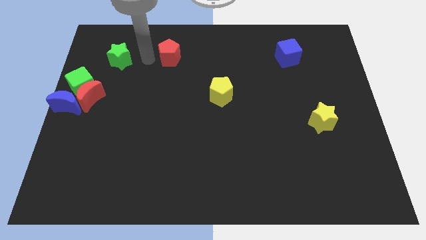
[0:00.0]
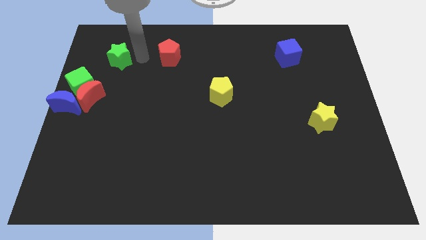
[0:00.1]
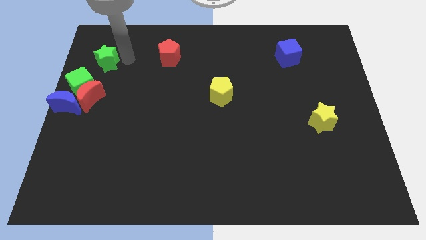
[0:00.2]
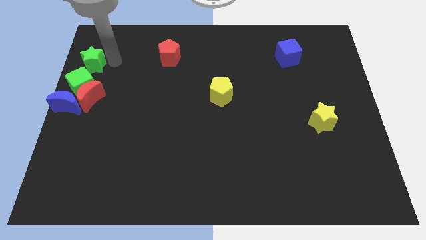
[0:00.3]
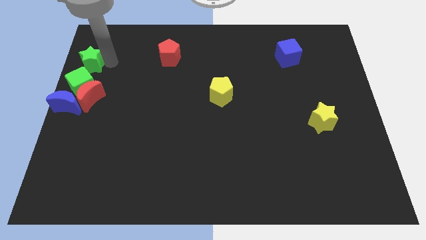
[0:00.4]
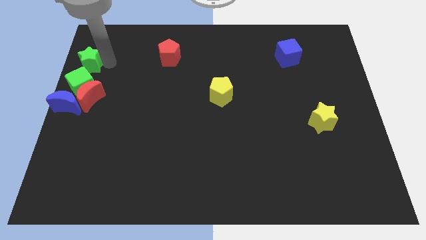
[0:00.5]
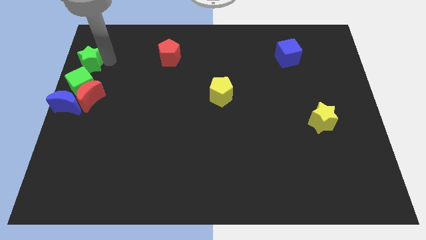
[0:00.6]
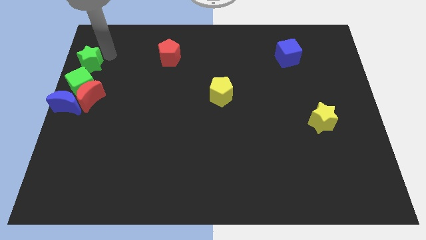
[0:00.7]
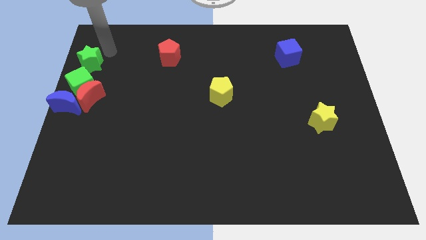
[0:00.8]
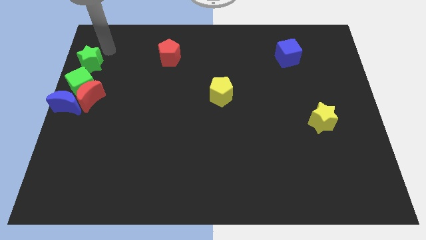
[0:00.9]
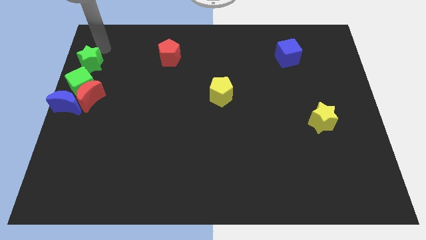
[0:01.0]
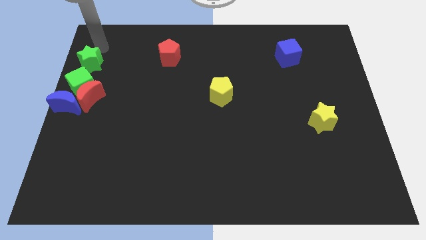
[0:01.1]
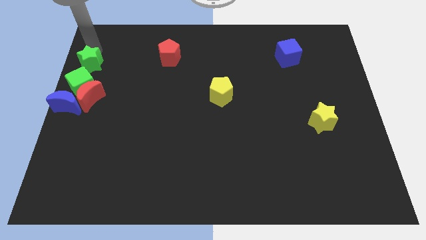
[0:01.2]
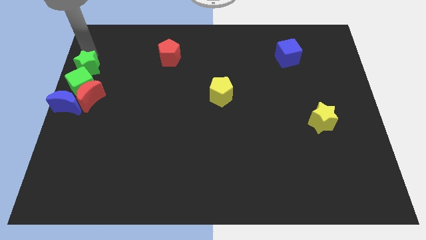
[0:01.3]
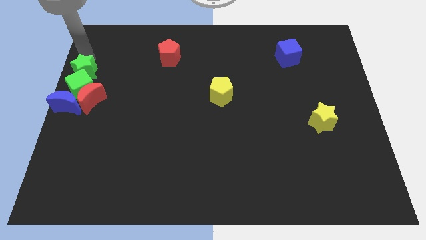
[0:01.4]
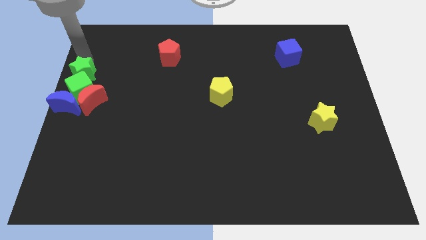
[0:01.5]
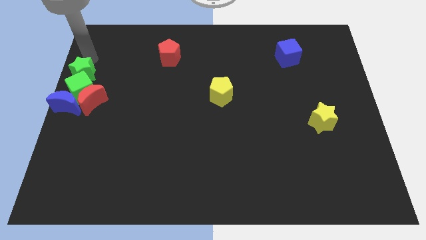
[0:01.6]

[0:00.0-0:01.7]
push the green star into the top of the green cube

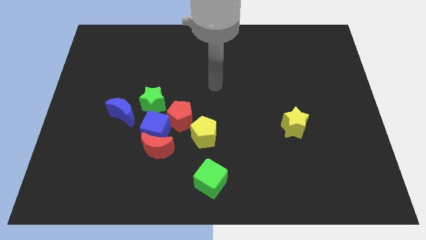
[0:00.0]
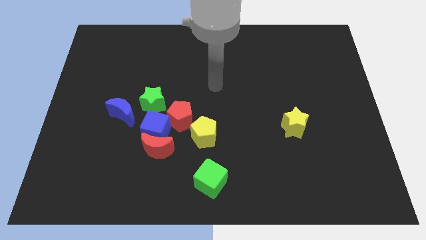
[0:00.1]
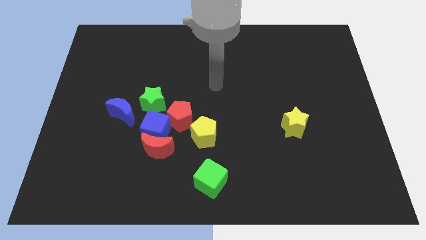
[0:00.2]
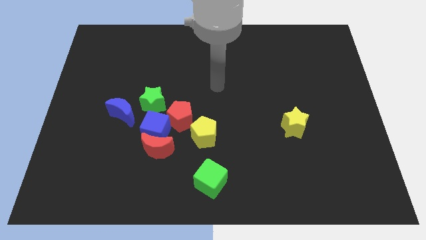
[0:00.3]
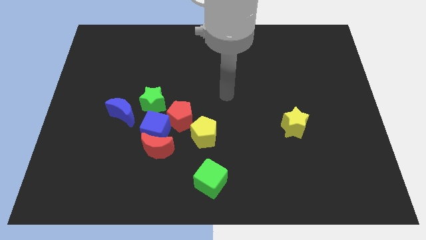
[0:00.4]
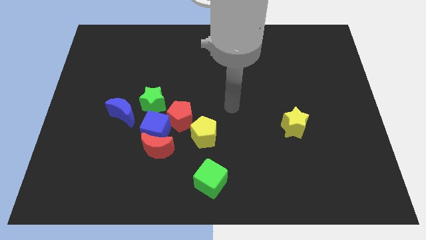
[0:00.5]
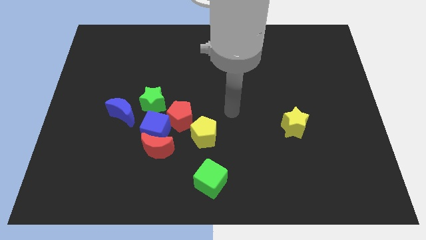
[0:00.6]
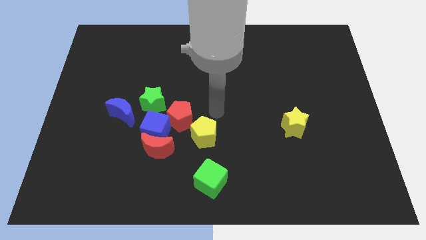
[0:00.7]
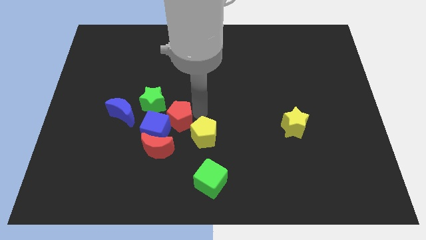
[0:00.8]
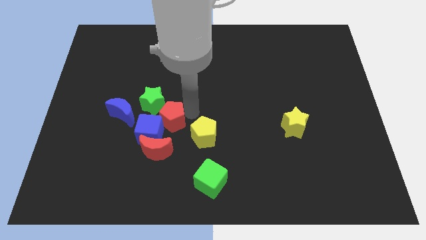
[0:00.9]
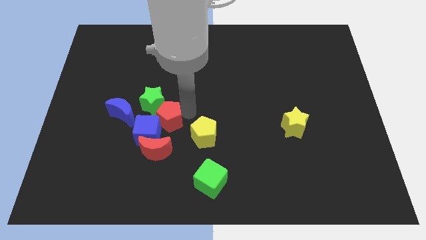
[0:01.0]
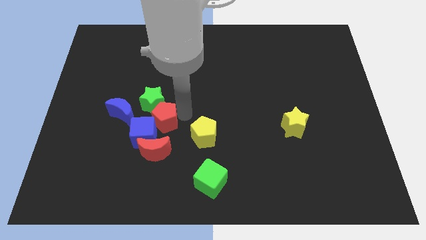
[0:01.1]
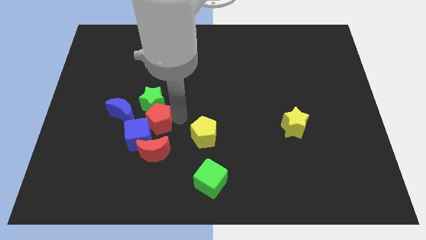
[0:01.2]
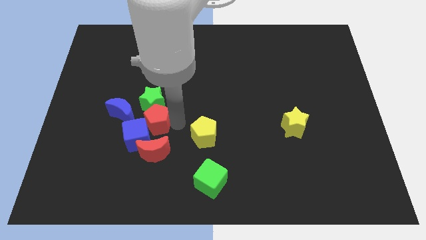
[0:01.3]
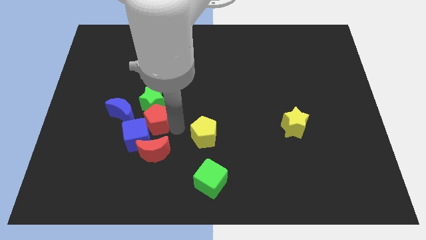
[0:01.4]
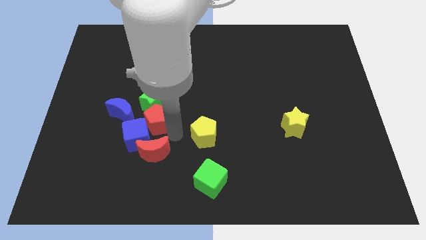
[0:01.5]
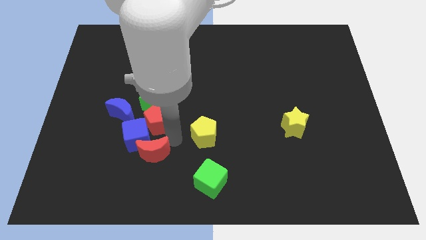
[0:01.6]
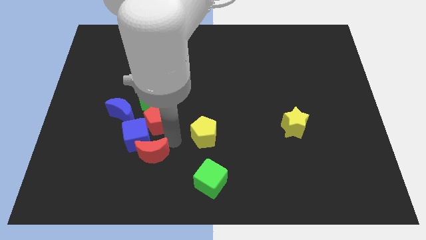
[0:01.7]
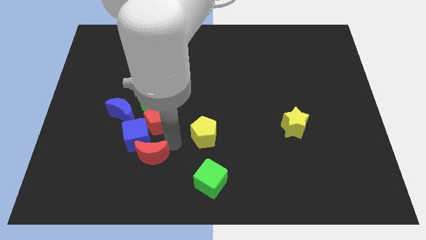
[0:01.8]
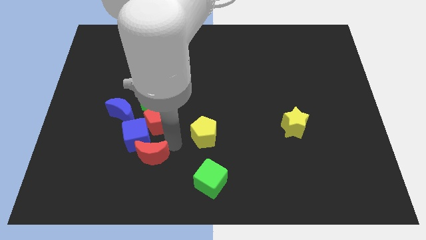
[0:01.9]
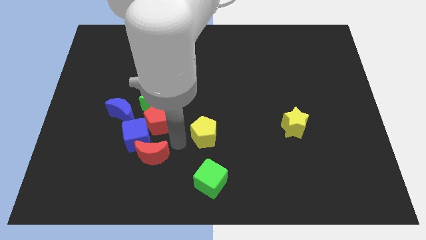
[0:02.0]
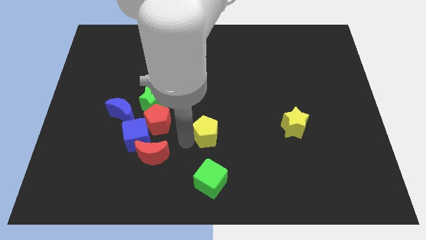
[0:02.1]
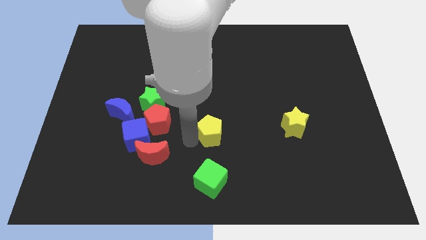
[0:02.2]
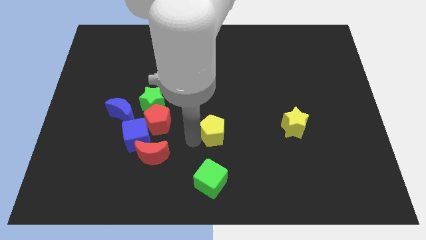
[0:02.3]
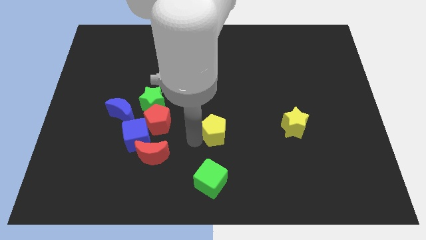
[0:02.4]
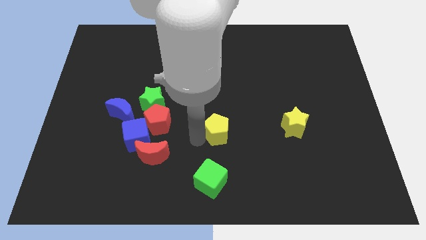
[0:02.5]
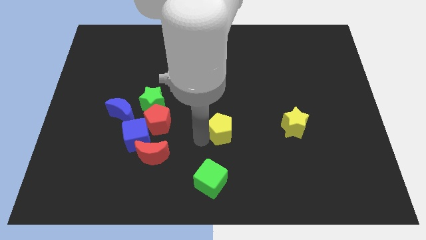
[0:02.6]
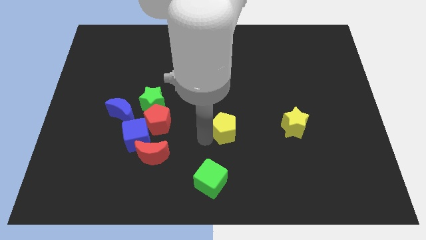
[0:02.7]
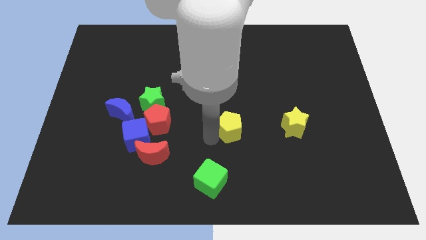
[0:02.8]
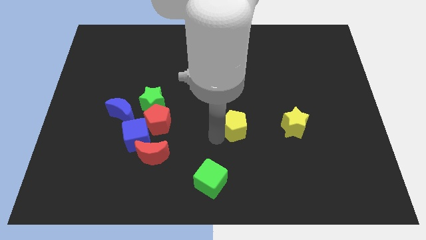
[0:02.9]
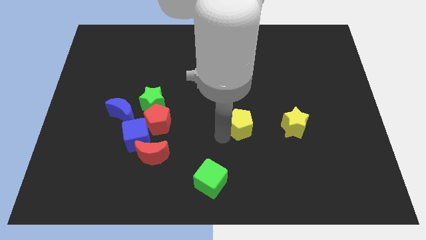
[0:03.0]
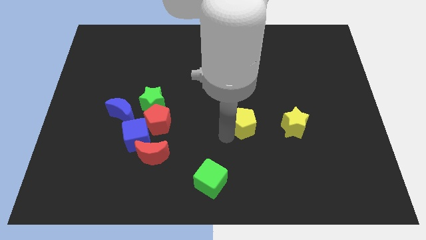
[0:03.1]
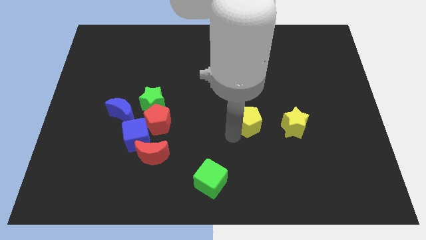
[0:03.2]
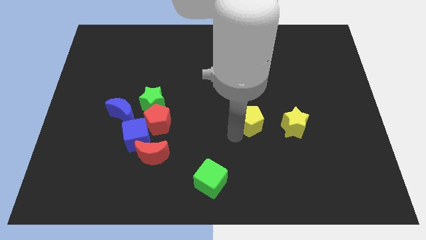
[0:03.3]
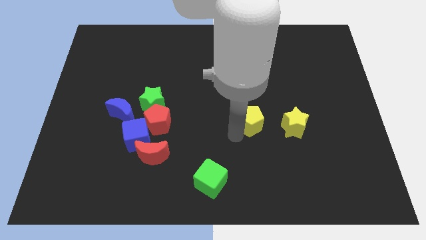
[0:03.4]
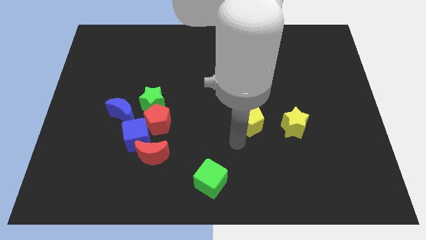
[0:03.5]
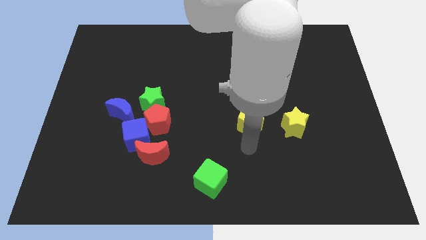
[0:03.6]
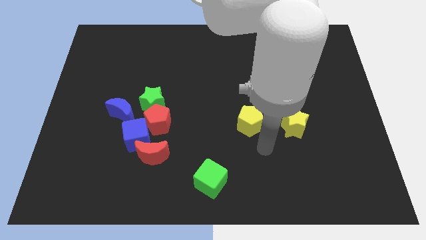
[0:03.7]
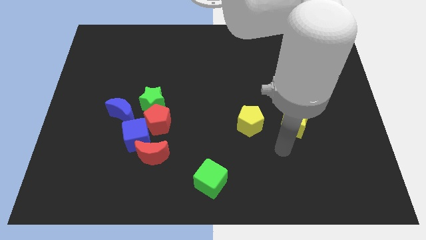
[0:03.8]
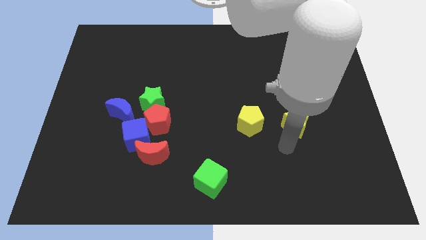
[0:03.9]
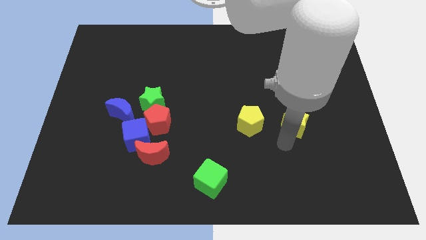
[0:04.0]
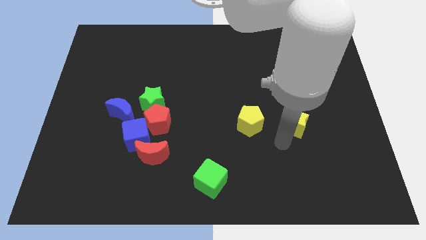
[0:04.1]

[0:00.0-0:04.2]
place the yellow pentagon to the left of the yellow star

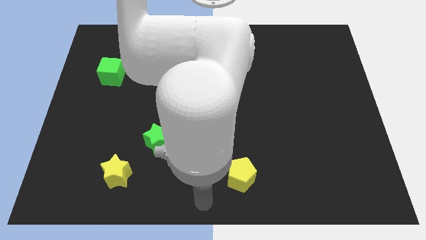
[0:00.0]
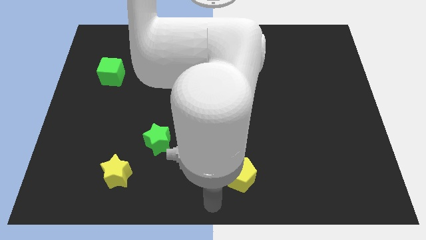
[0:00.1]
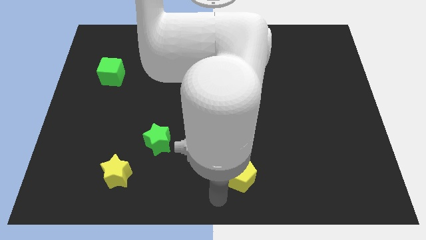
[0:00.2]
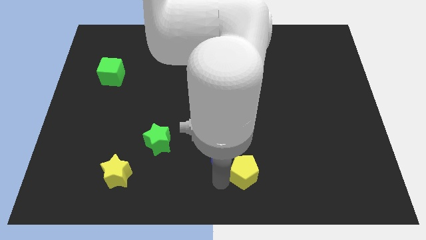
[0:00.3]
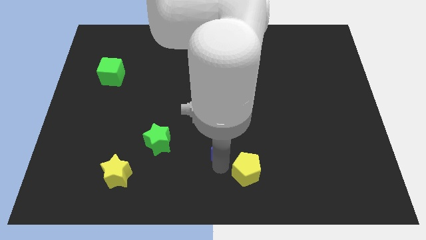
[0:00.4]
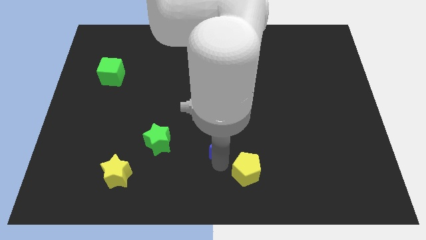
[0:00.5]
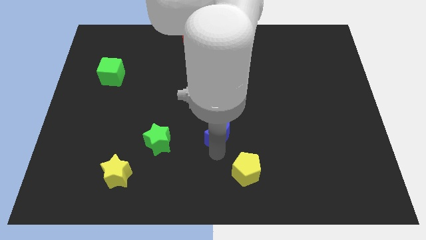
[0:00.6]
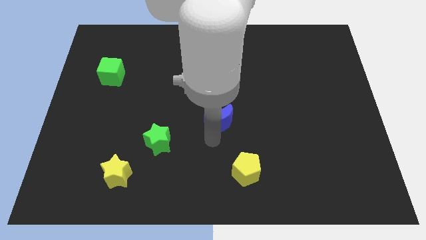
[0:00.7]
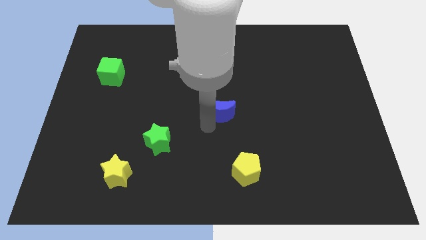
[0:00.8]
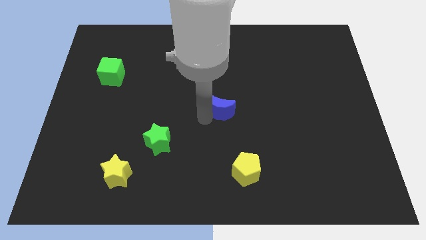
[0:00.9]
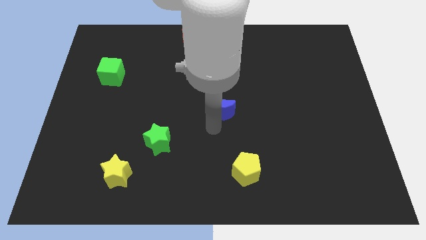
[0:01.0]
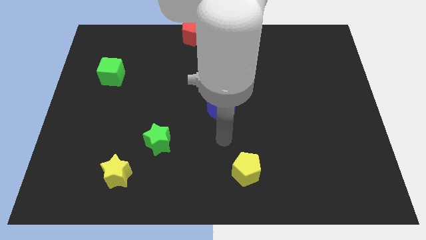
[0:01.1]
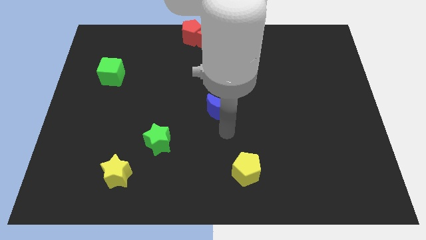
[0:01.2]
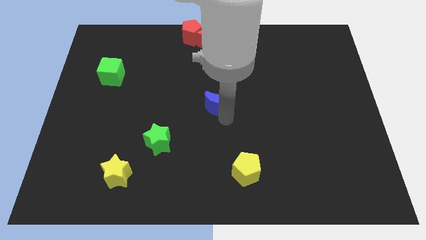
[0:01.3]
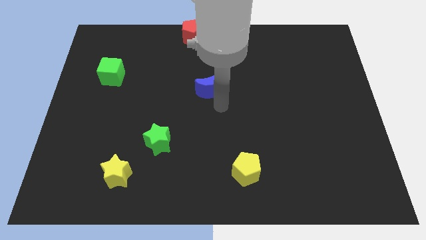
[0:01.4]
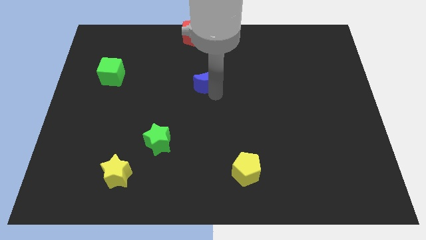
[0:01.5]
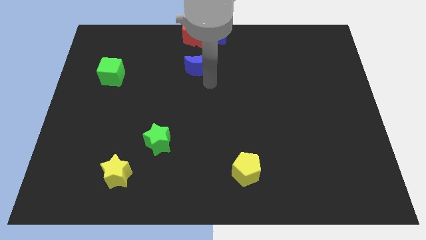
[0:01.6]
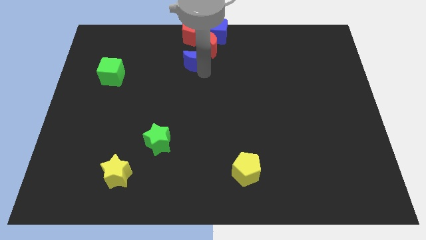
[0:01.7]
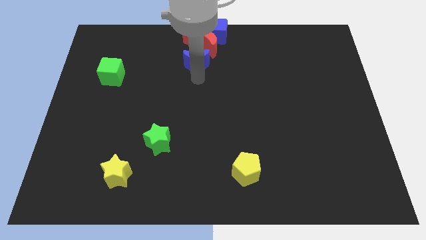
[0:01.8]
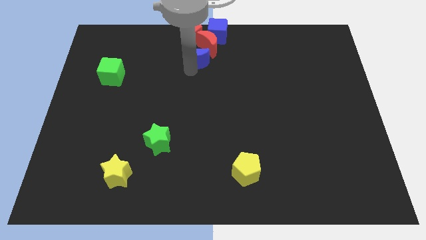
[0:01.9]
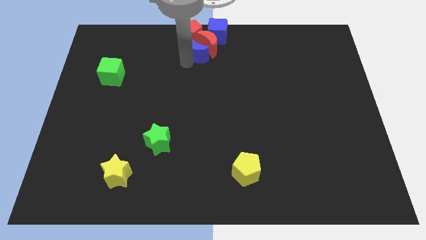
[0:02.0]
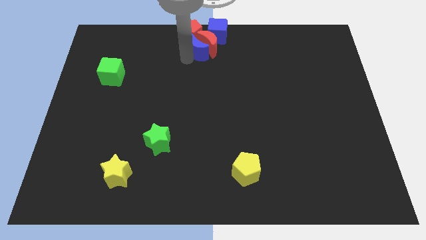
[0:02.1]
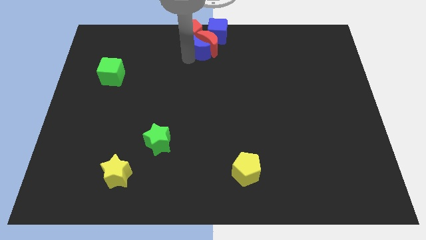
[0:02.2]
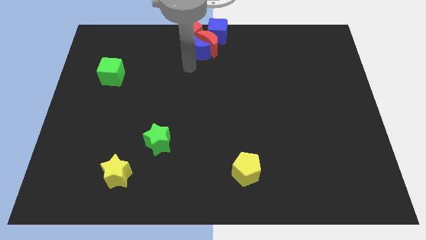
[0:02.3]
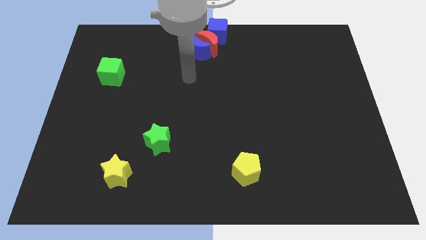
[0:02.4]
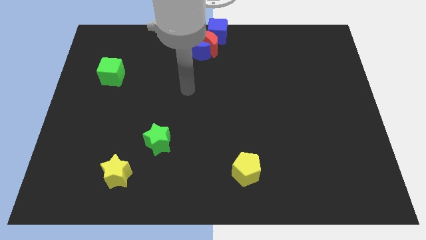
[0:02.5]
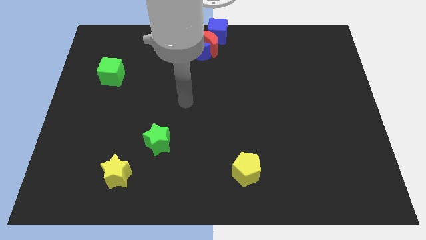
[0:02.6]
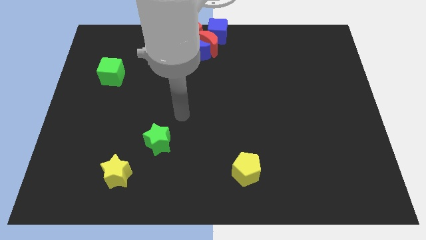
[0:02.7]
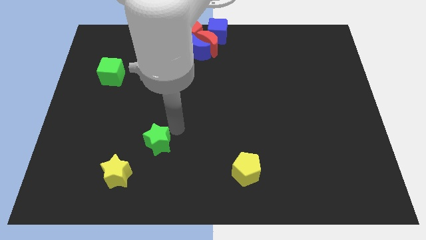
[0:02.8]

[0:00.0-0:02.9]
move the blue moon towards the red blocks
